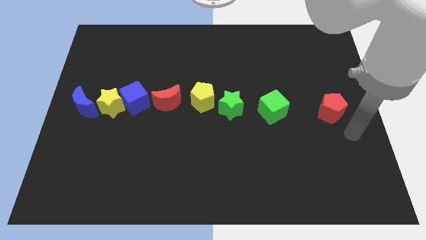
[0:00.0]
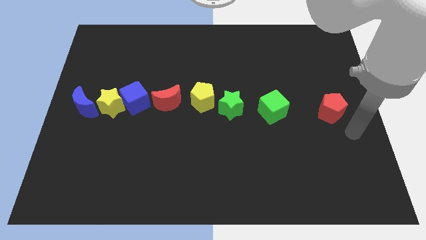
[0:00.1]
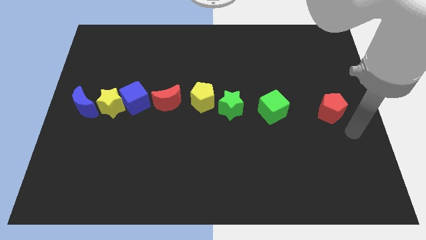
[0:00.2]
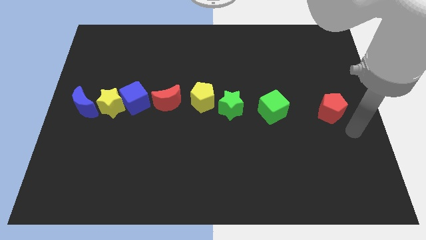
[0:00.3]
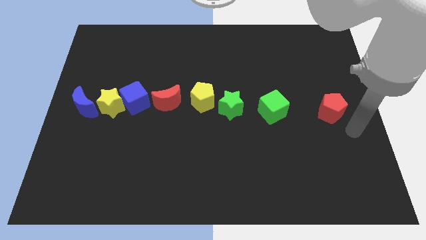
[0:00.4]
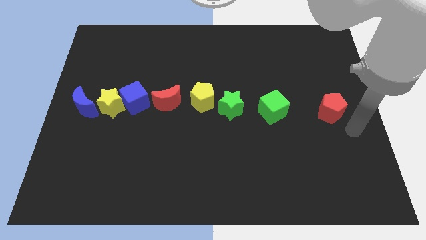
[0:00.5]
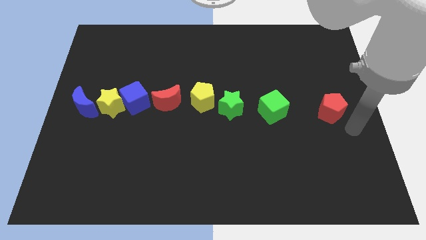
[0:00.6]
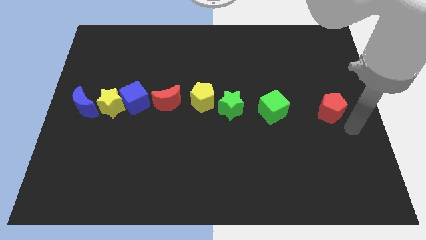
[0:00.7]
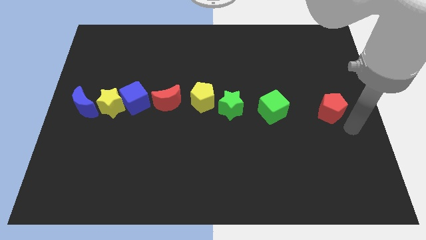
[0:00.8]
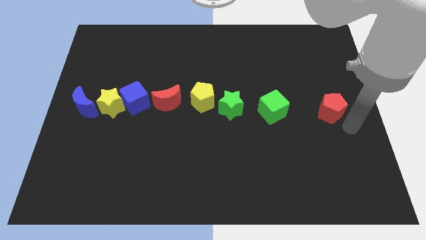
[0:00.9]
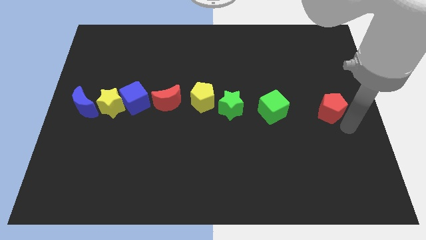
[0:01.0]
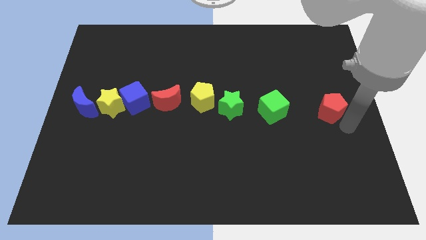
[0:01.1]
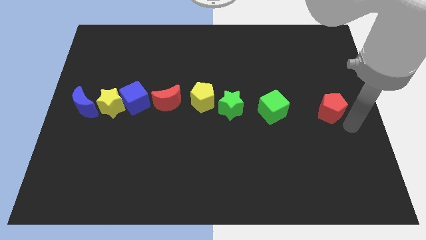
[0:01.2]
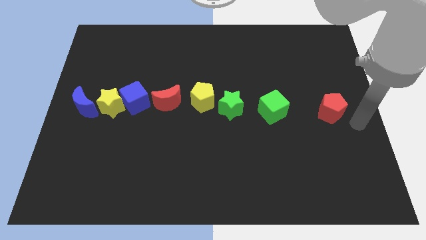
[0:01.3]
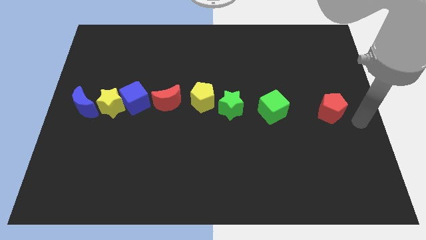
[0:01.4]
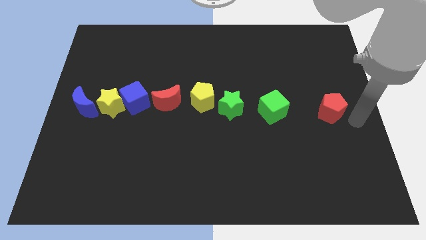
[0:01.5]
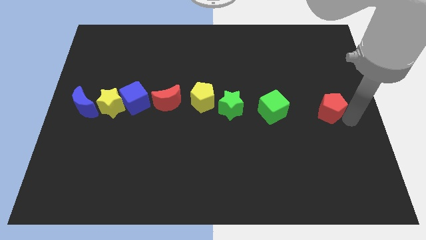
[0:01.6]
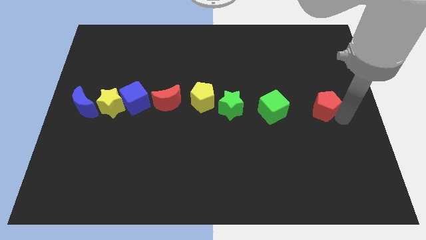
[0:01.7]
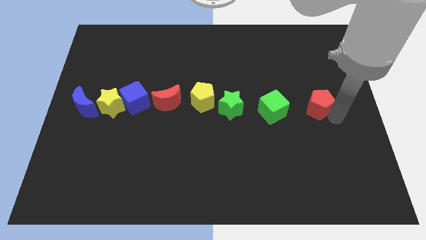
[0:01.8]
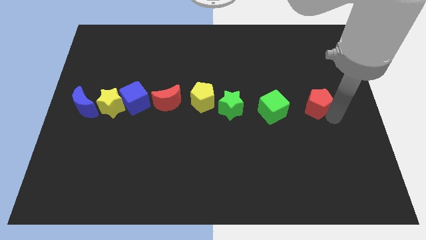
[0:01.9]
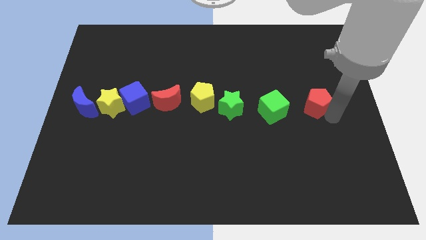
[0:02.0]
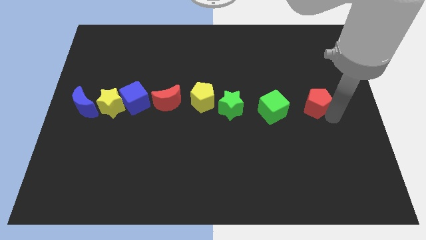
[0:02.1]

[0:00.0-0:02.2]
move the red pentagon towards the green cube

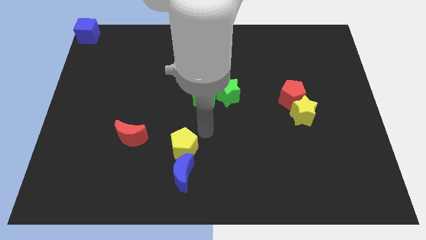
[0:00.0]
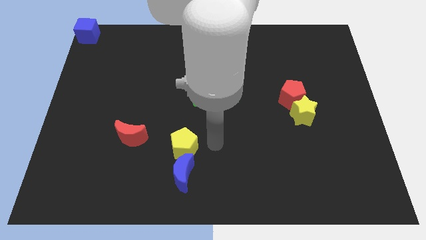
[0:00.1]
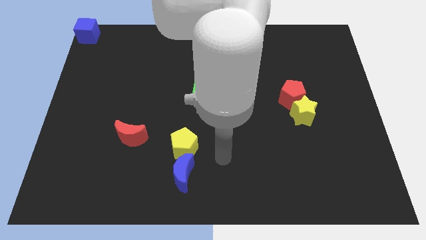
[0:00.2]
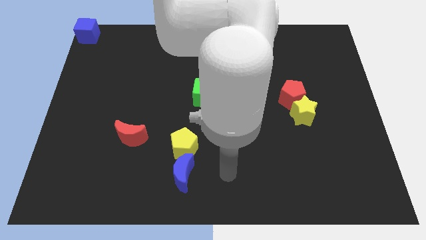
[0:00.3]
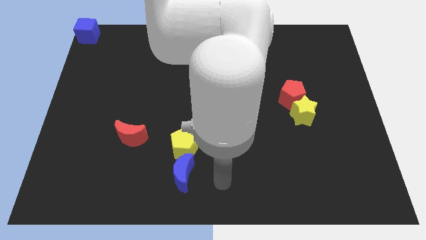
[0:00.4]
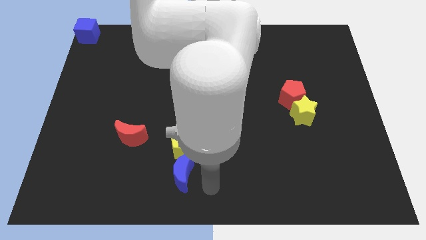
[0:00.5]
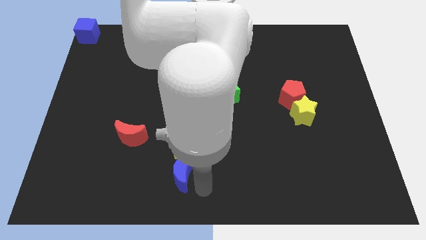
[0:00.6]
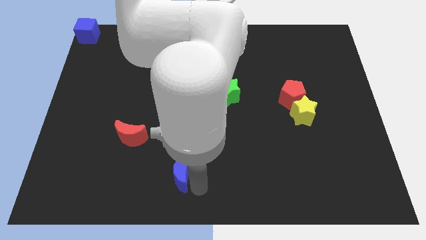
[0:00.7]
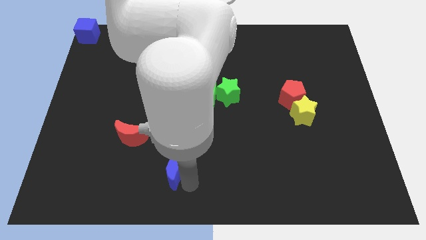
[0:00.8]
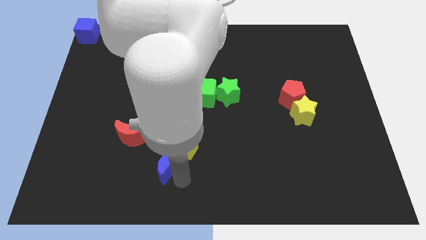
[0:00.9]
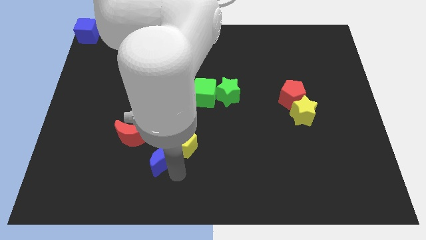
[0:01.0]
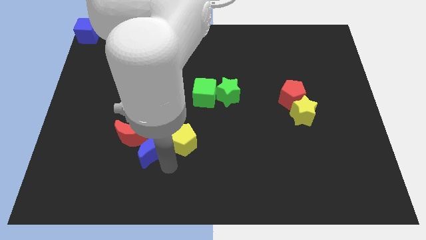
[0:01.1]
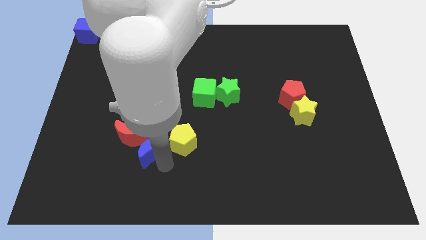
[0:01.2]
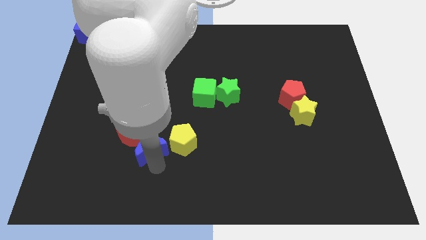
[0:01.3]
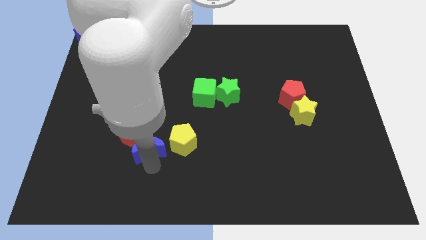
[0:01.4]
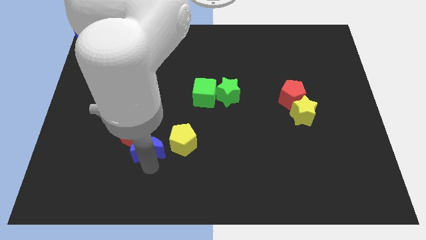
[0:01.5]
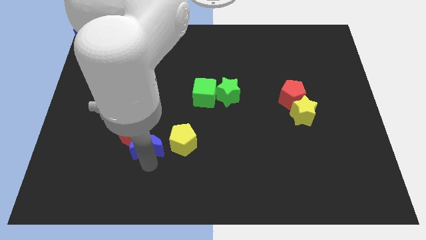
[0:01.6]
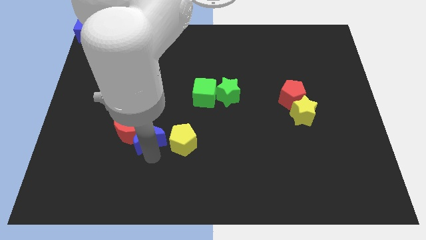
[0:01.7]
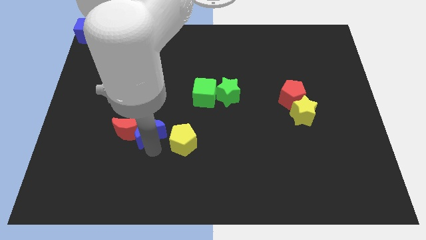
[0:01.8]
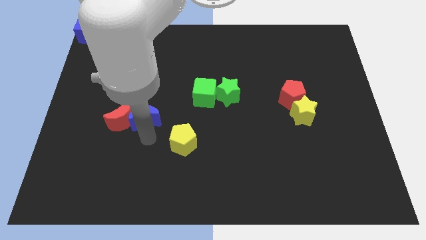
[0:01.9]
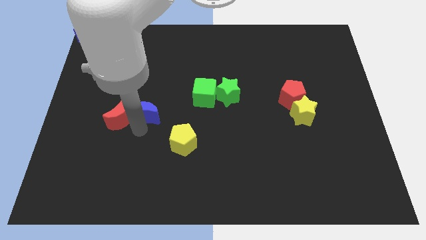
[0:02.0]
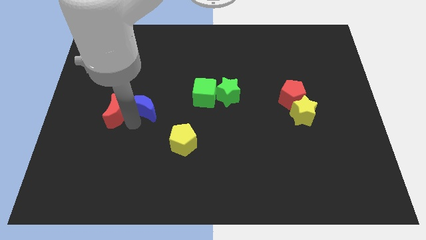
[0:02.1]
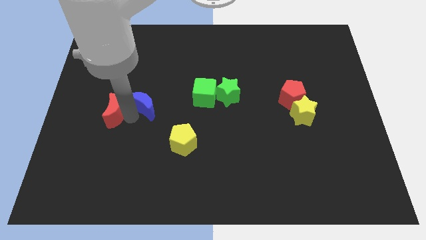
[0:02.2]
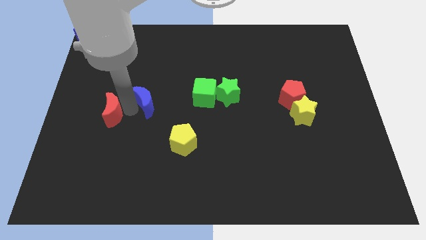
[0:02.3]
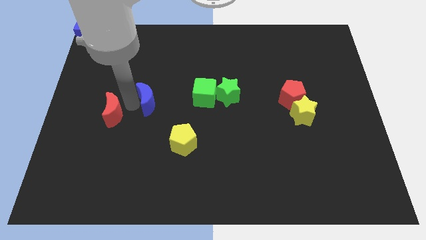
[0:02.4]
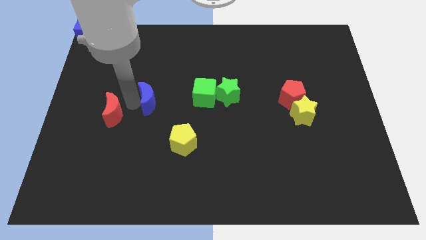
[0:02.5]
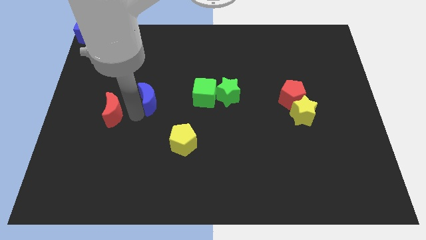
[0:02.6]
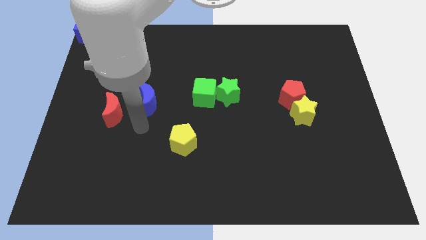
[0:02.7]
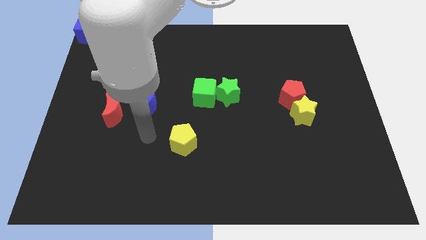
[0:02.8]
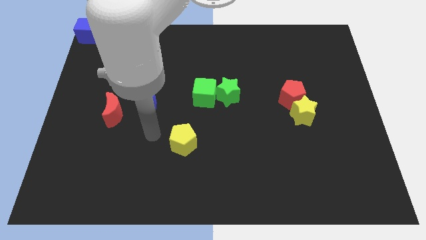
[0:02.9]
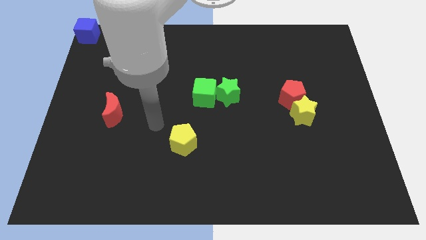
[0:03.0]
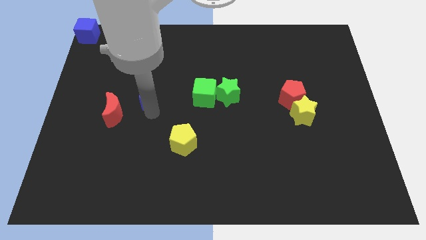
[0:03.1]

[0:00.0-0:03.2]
push the blue moon to the horizontal left of the green cube

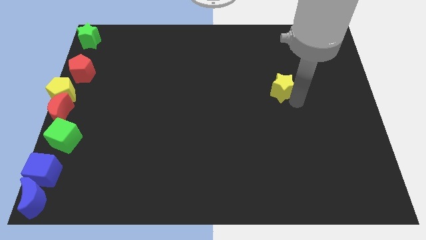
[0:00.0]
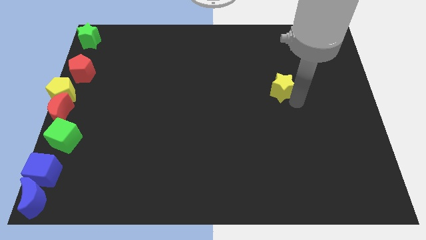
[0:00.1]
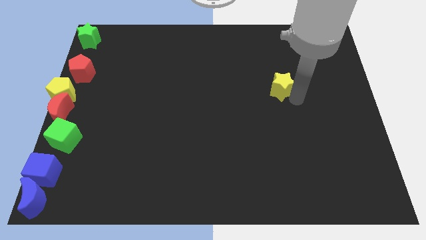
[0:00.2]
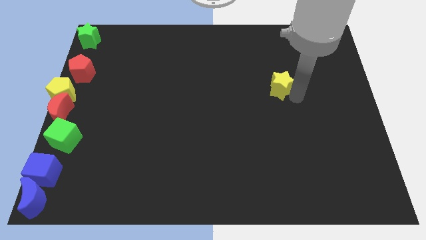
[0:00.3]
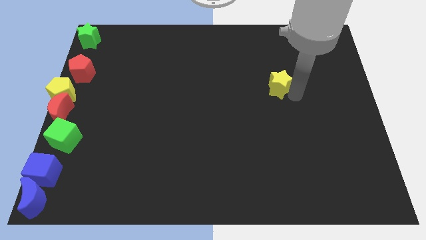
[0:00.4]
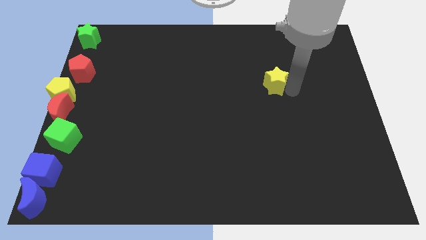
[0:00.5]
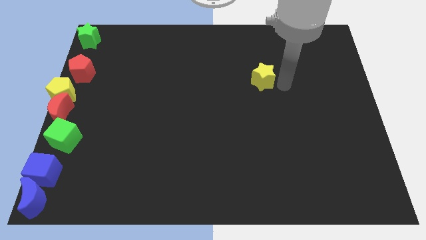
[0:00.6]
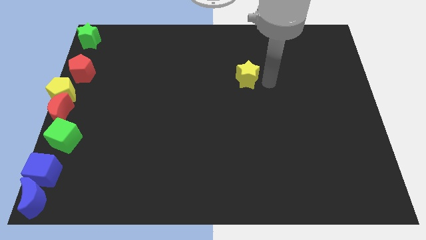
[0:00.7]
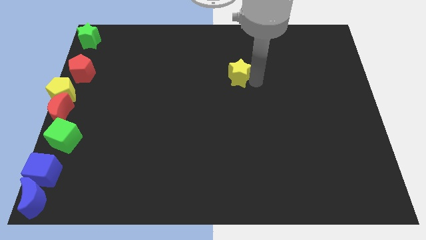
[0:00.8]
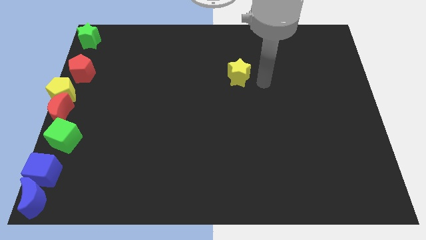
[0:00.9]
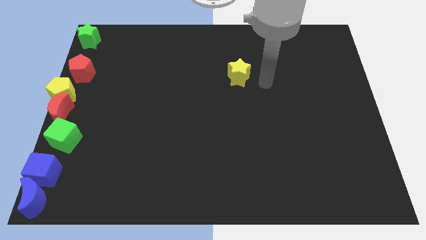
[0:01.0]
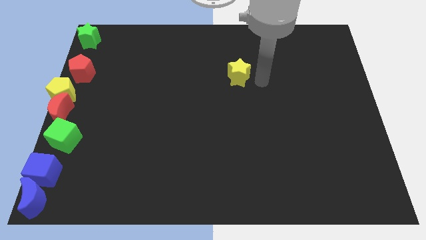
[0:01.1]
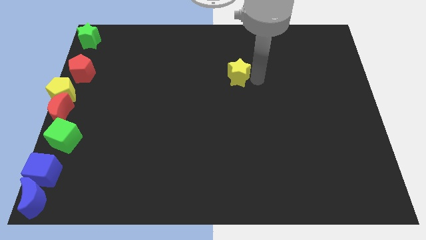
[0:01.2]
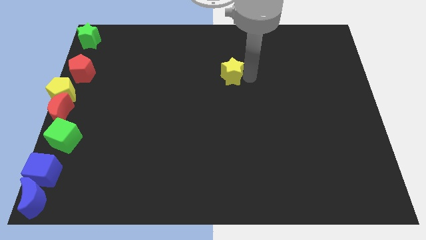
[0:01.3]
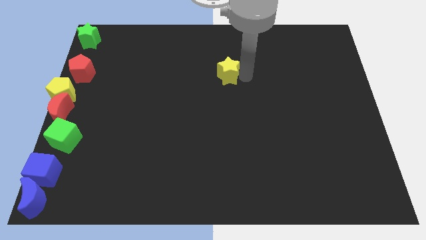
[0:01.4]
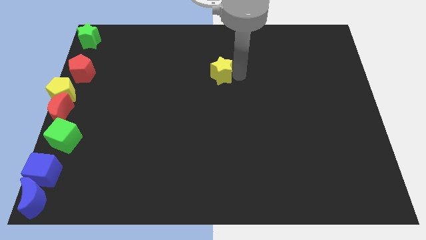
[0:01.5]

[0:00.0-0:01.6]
move the yellow star to the center left

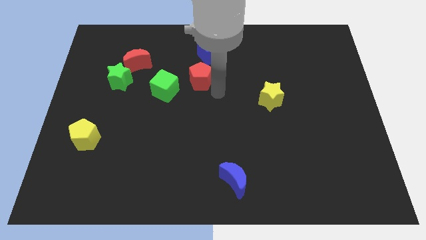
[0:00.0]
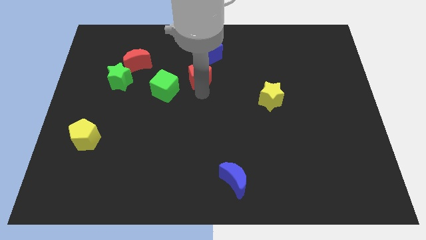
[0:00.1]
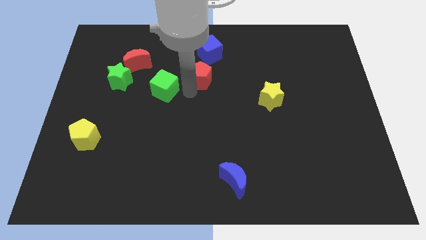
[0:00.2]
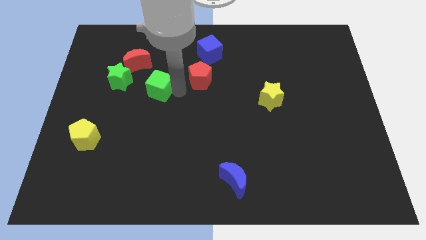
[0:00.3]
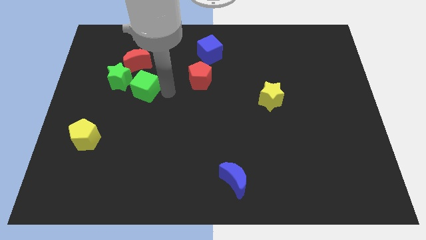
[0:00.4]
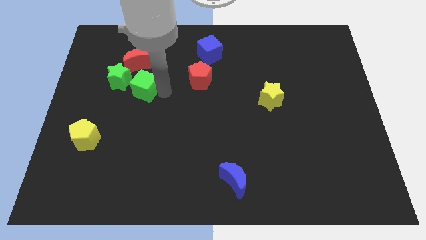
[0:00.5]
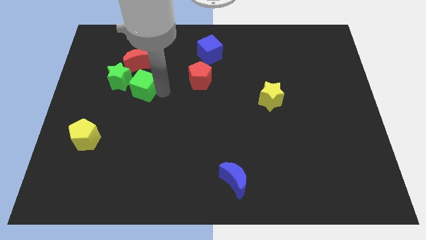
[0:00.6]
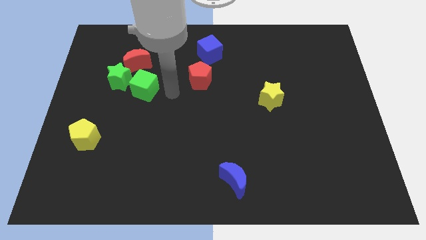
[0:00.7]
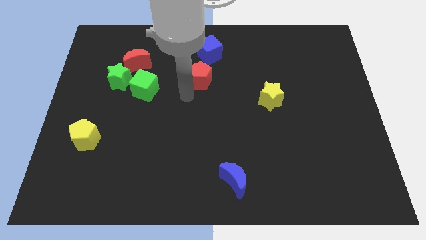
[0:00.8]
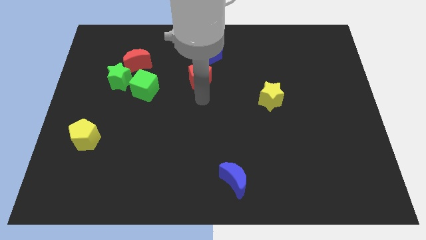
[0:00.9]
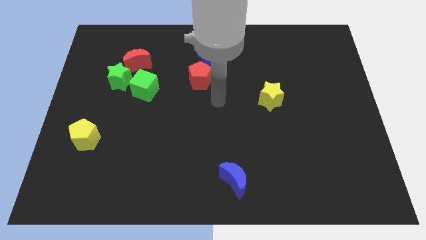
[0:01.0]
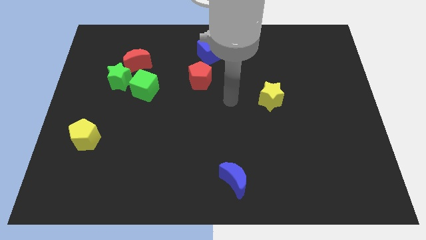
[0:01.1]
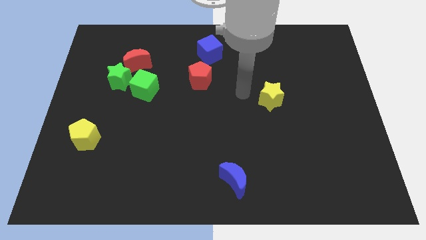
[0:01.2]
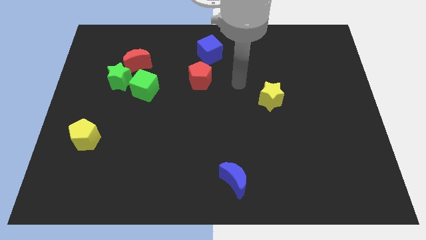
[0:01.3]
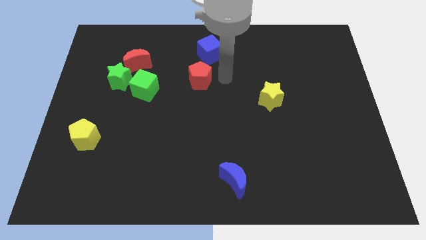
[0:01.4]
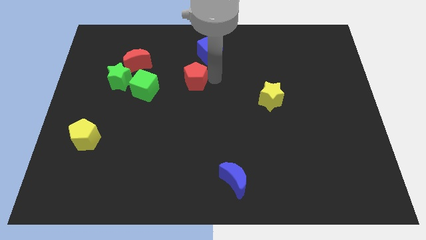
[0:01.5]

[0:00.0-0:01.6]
move green cube close to green star

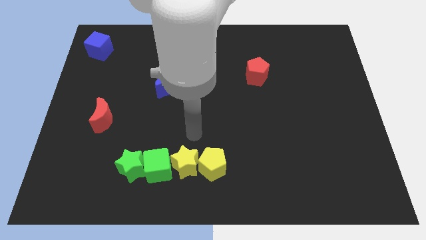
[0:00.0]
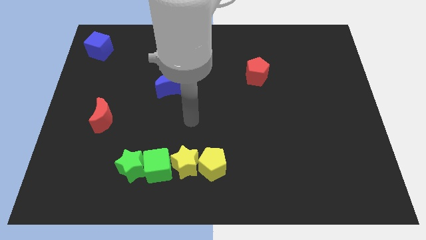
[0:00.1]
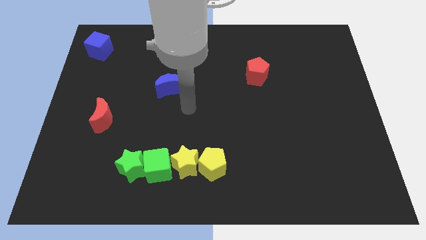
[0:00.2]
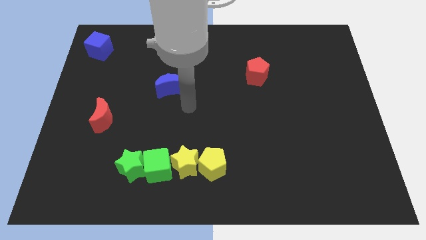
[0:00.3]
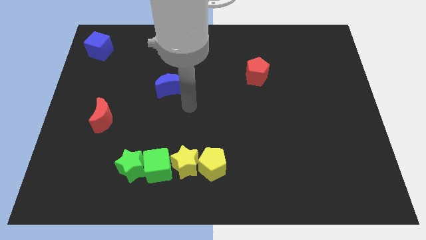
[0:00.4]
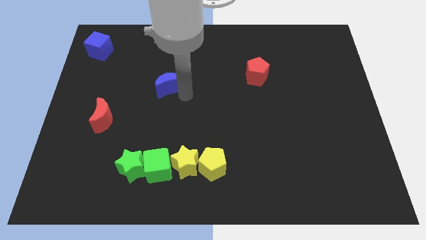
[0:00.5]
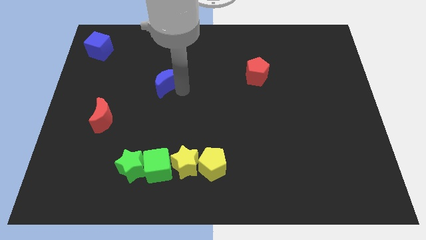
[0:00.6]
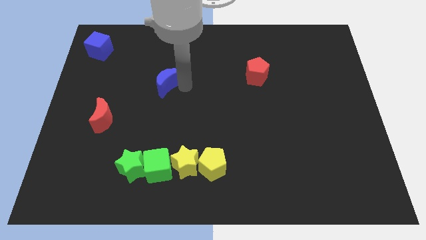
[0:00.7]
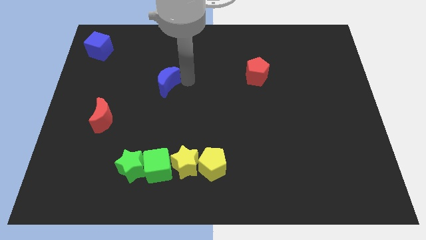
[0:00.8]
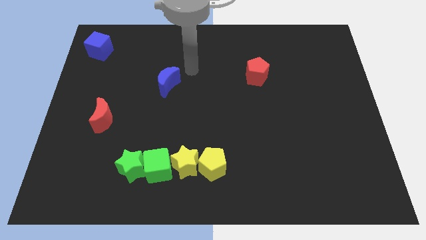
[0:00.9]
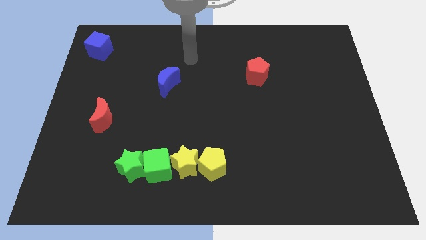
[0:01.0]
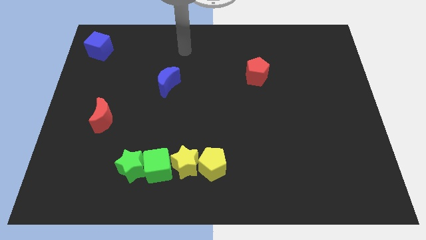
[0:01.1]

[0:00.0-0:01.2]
slightly push blue moon to its left
